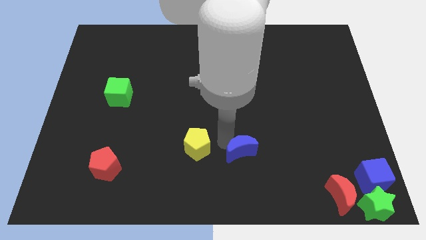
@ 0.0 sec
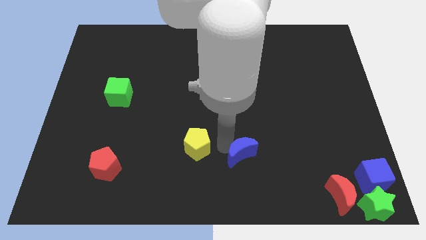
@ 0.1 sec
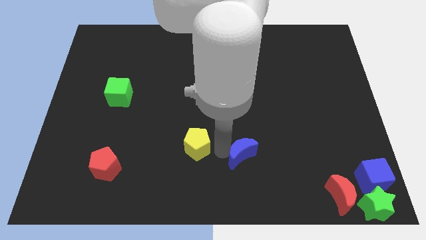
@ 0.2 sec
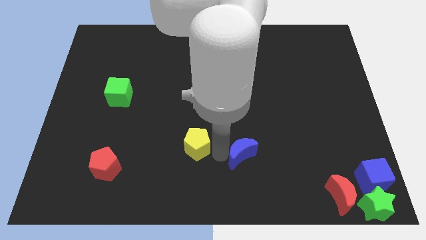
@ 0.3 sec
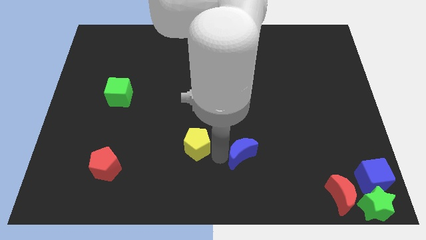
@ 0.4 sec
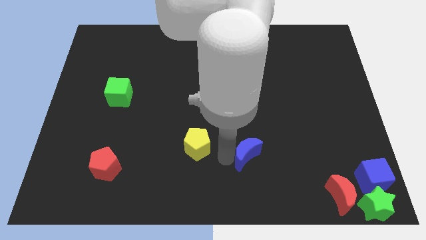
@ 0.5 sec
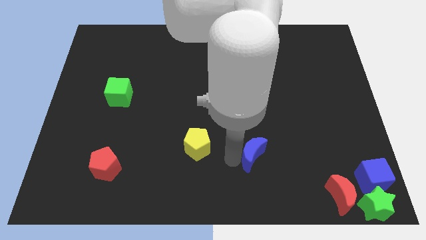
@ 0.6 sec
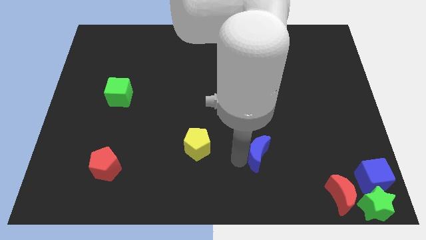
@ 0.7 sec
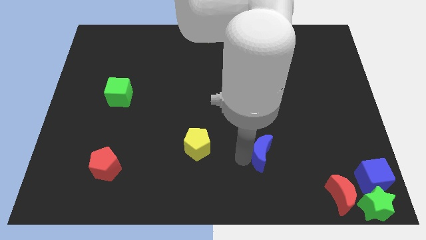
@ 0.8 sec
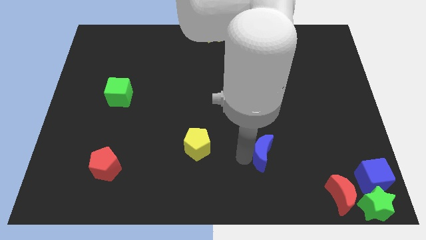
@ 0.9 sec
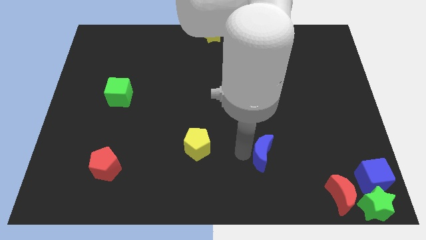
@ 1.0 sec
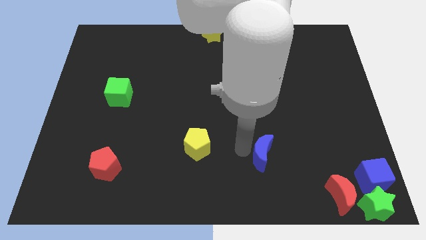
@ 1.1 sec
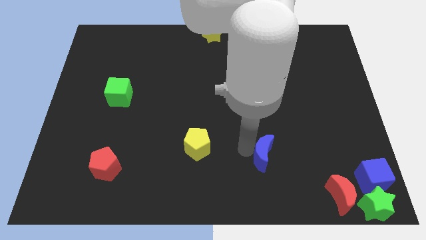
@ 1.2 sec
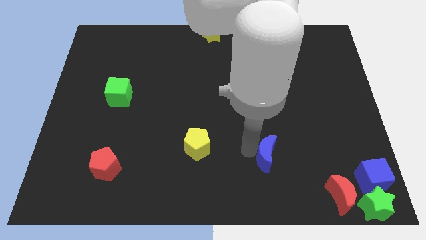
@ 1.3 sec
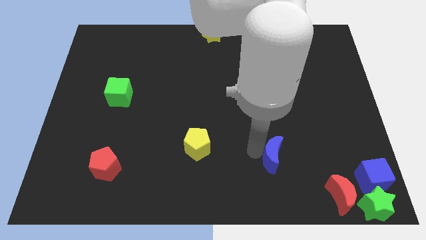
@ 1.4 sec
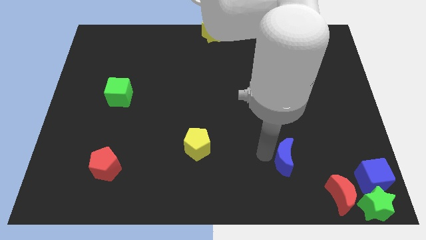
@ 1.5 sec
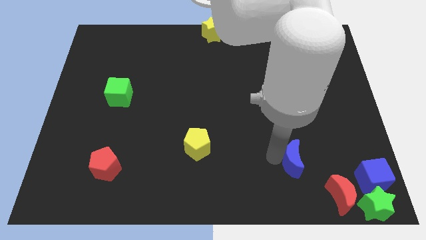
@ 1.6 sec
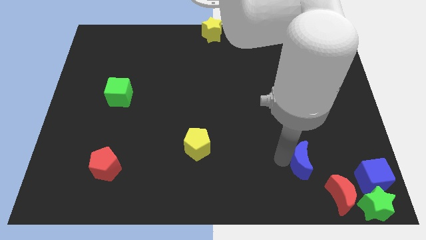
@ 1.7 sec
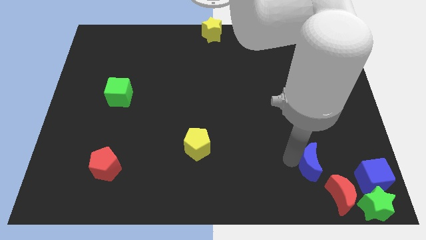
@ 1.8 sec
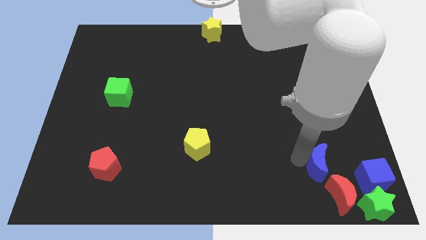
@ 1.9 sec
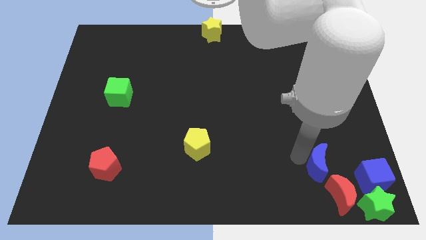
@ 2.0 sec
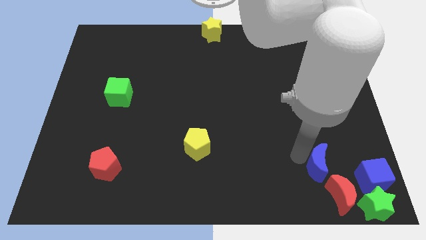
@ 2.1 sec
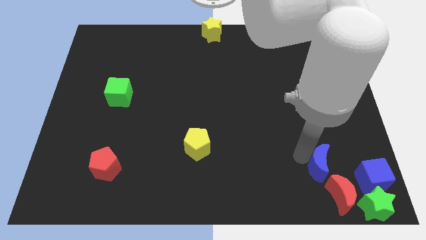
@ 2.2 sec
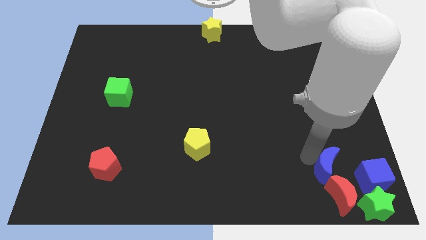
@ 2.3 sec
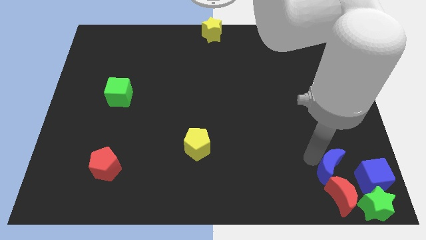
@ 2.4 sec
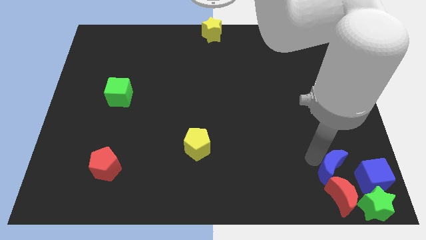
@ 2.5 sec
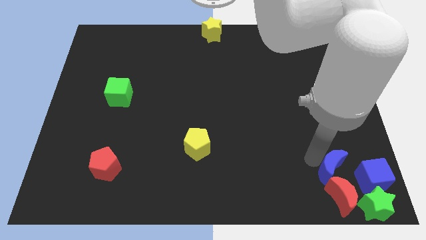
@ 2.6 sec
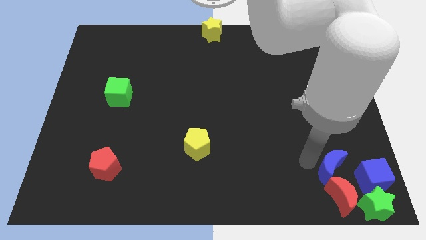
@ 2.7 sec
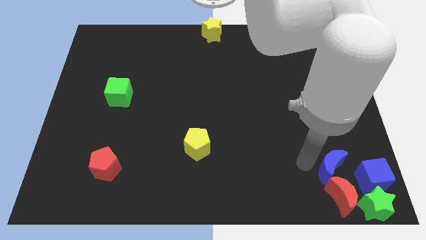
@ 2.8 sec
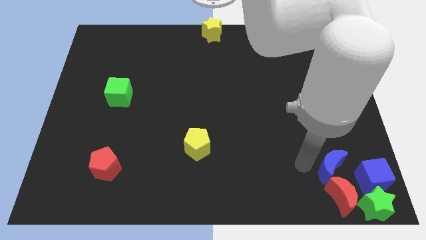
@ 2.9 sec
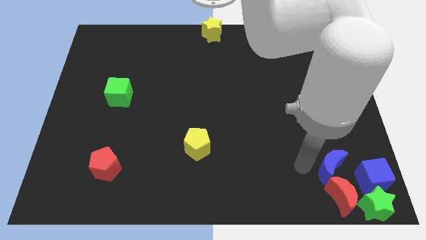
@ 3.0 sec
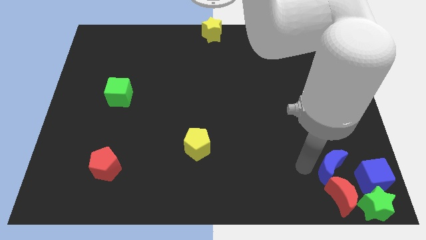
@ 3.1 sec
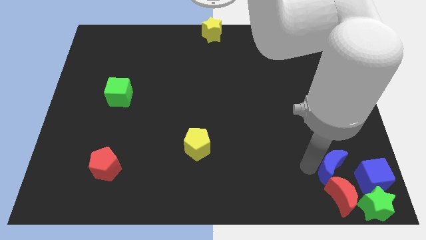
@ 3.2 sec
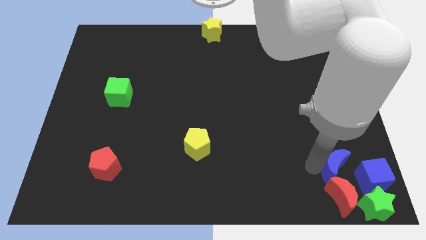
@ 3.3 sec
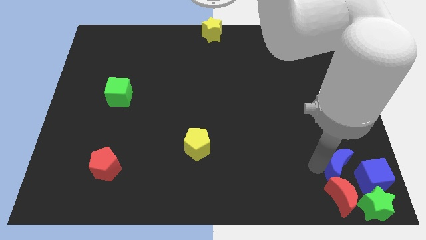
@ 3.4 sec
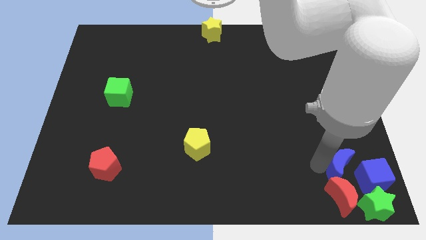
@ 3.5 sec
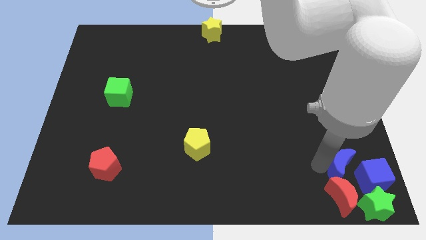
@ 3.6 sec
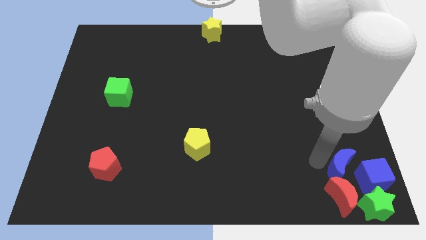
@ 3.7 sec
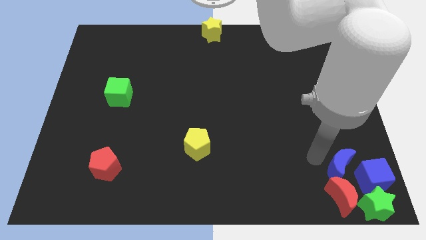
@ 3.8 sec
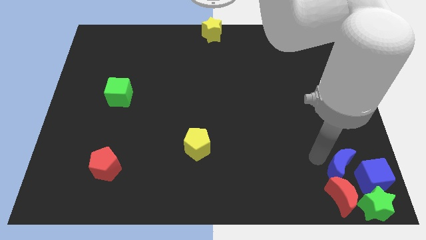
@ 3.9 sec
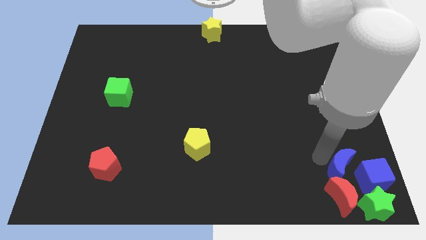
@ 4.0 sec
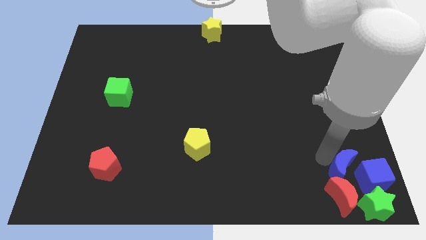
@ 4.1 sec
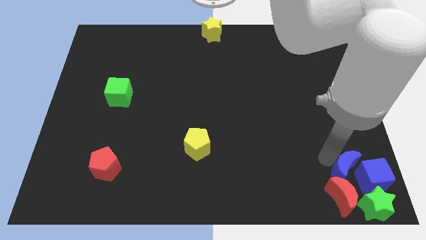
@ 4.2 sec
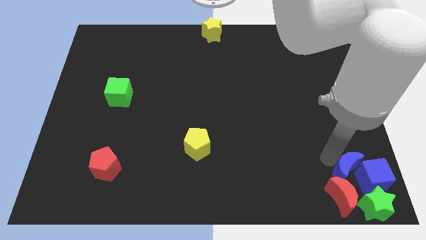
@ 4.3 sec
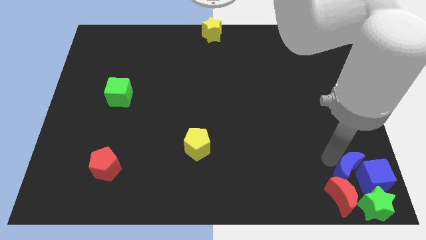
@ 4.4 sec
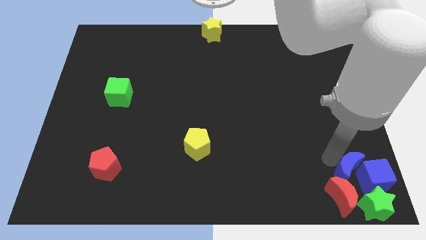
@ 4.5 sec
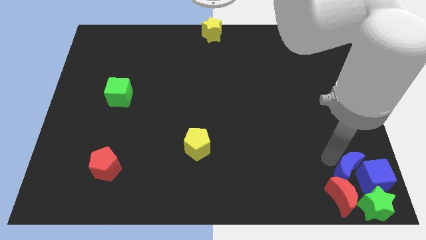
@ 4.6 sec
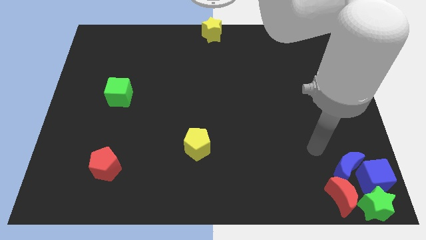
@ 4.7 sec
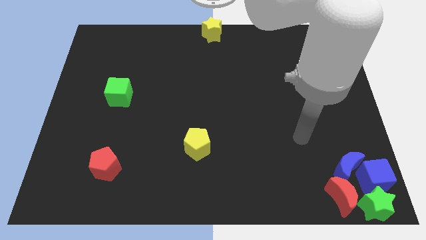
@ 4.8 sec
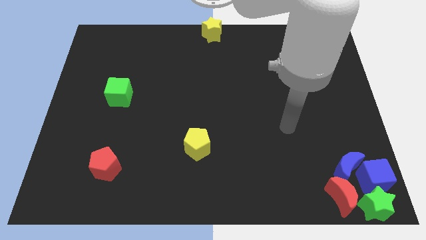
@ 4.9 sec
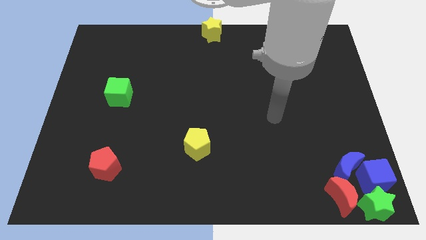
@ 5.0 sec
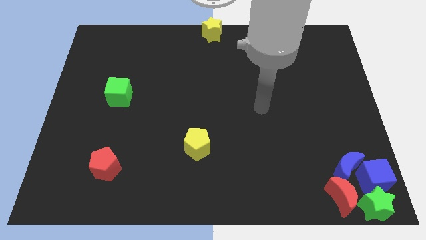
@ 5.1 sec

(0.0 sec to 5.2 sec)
move the blue moon top left above the blue cube

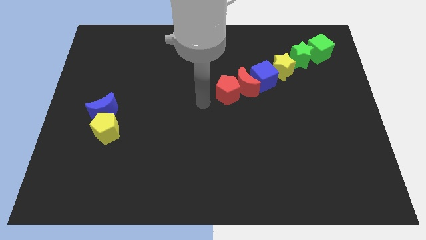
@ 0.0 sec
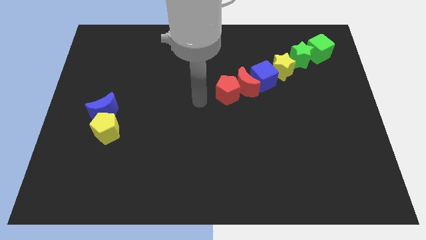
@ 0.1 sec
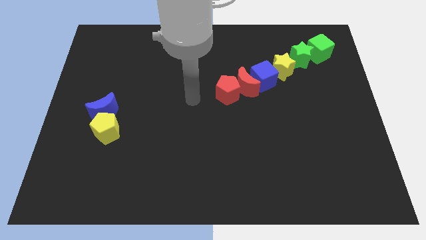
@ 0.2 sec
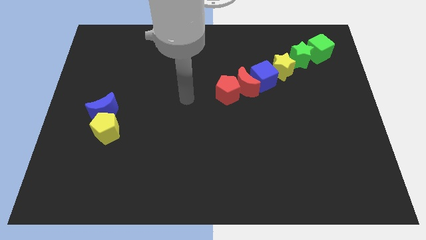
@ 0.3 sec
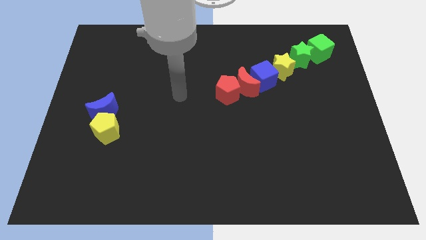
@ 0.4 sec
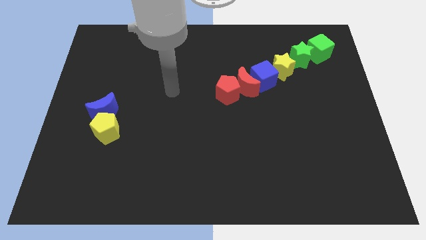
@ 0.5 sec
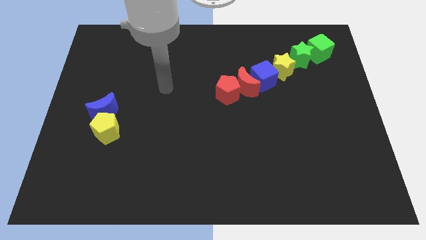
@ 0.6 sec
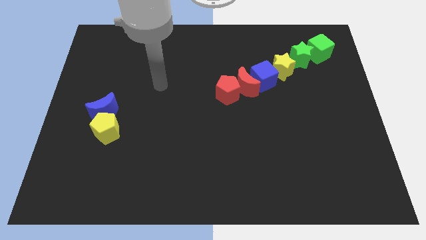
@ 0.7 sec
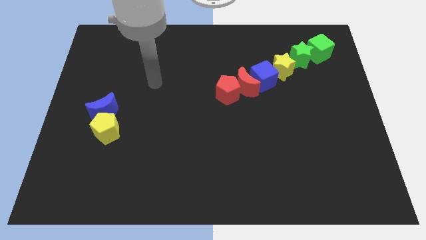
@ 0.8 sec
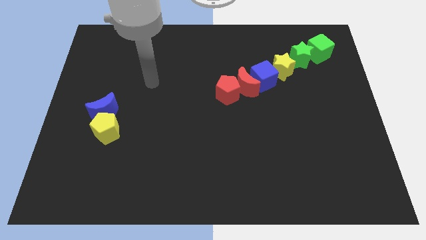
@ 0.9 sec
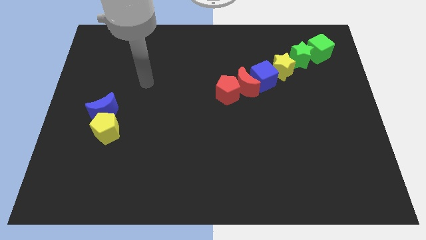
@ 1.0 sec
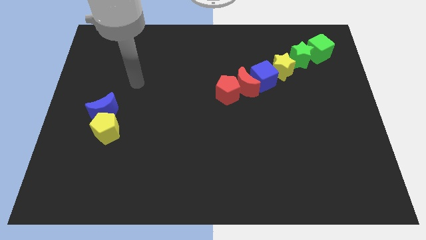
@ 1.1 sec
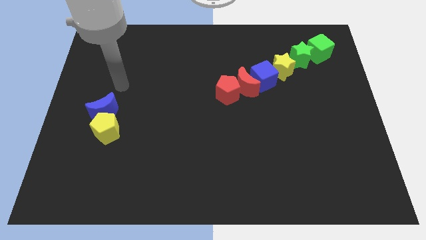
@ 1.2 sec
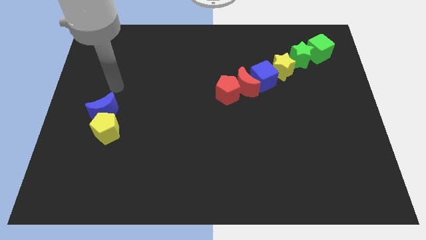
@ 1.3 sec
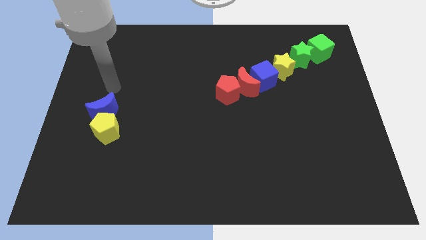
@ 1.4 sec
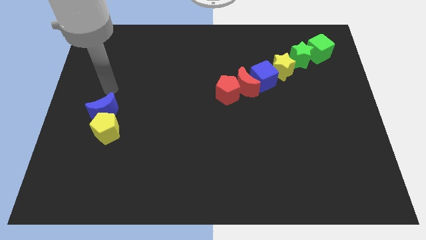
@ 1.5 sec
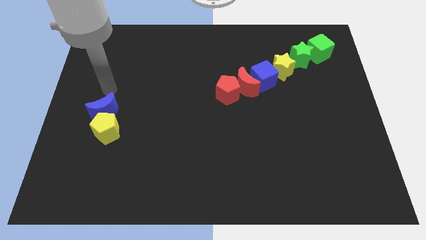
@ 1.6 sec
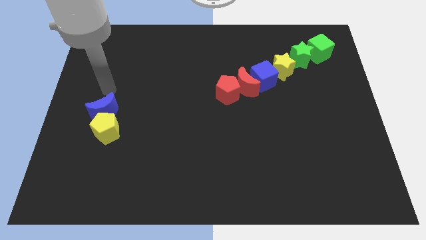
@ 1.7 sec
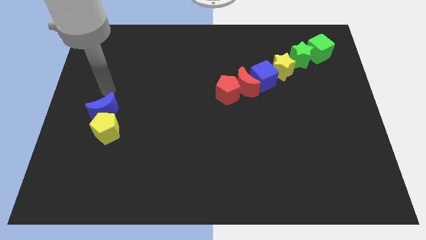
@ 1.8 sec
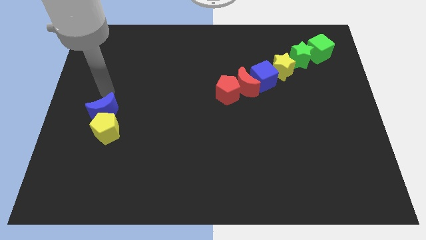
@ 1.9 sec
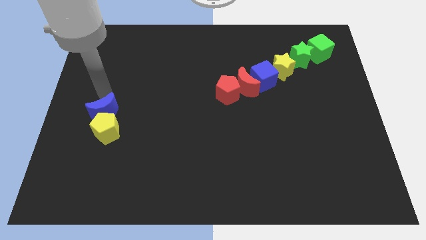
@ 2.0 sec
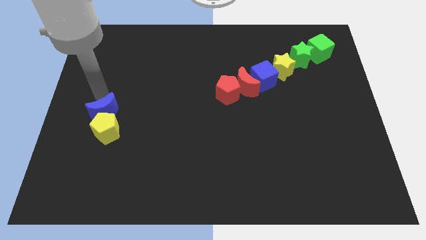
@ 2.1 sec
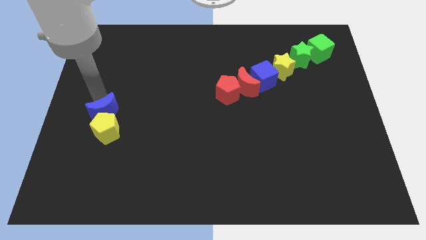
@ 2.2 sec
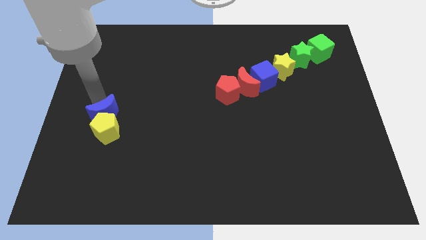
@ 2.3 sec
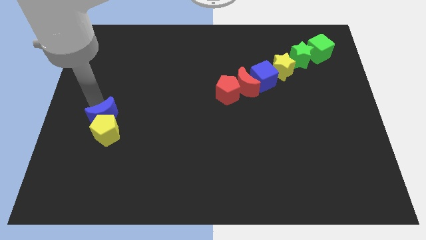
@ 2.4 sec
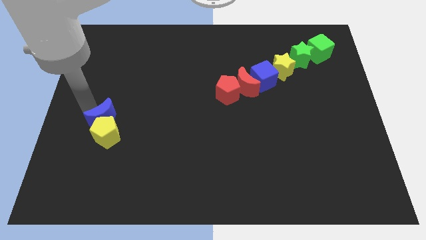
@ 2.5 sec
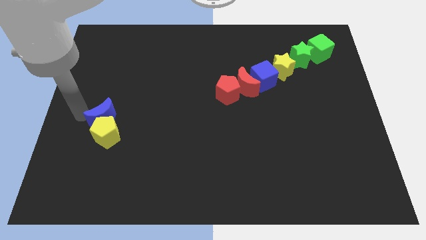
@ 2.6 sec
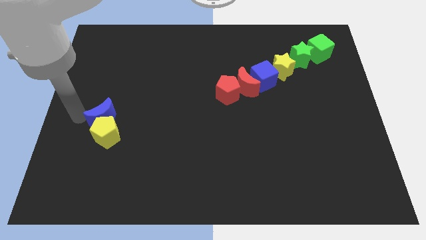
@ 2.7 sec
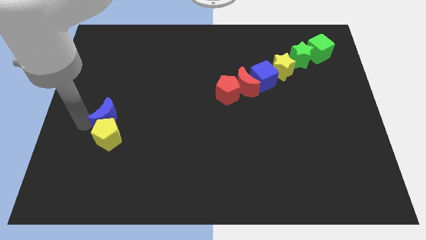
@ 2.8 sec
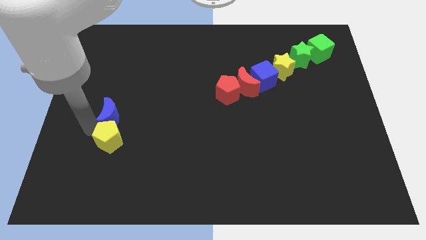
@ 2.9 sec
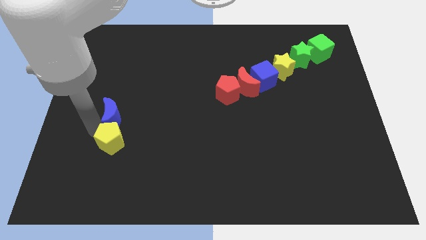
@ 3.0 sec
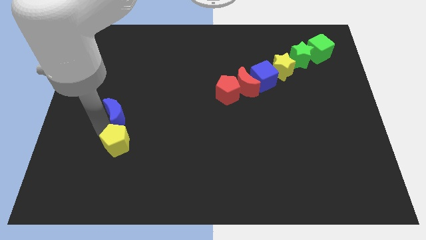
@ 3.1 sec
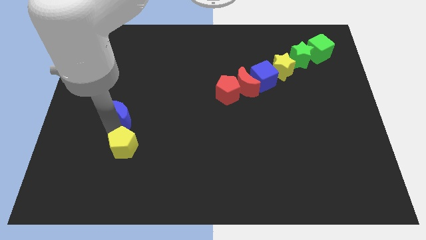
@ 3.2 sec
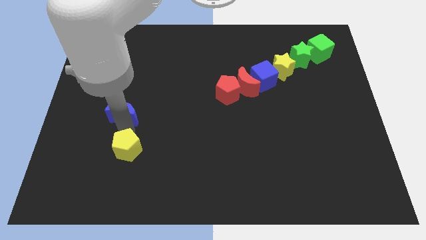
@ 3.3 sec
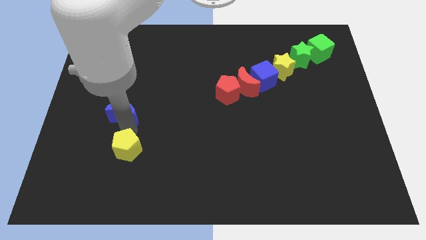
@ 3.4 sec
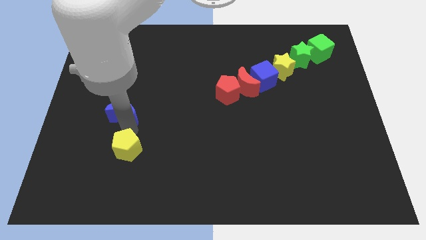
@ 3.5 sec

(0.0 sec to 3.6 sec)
separate the yellow pentagon and blue crescent
